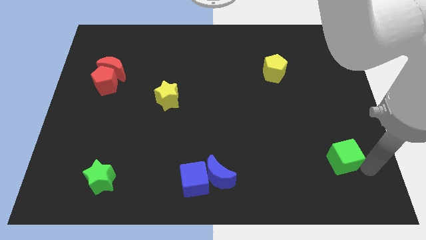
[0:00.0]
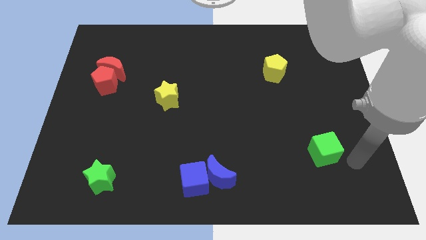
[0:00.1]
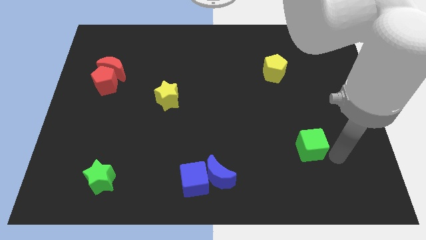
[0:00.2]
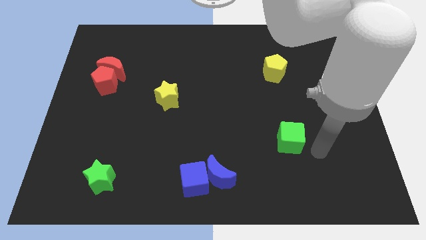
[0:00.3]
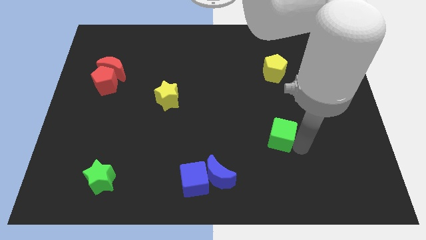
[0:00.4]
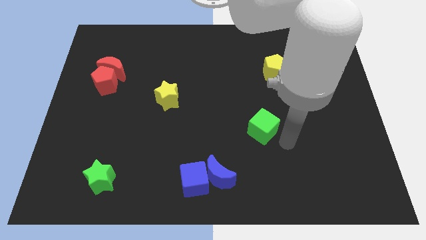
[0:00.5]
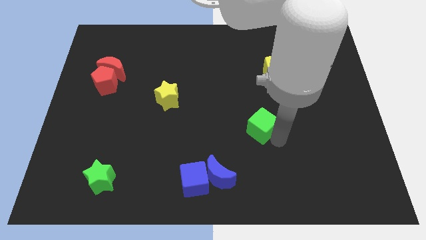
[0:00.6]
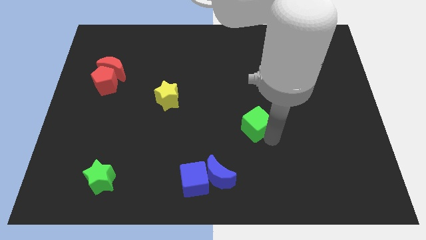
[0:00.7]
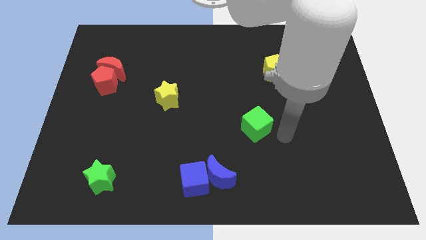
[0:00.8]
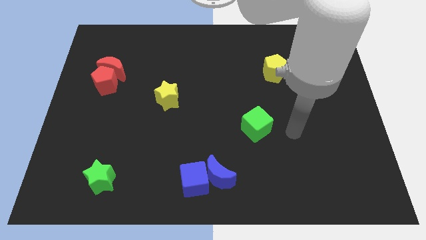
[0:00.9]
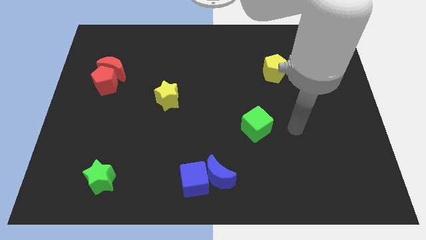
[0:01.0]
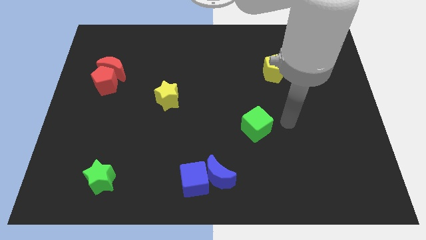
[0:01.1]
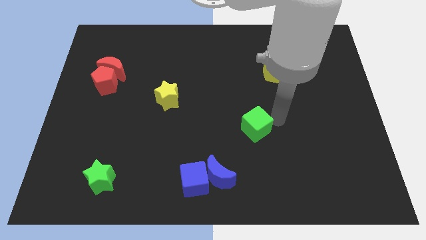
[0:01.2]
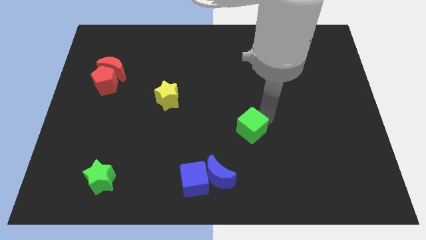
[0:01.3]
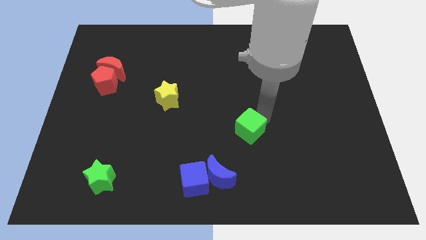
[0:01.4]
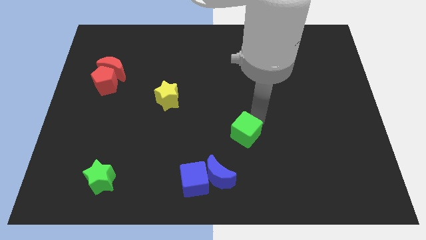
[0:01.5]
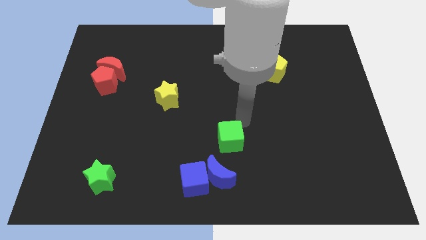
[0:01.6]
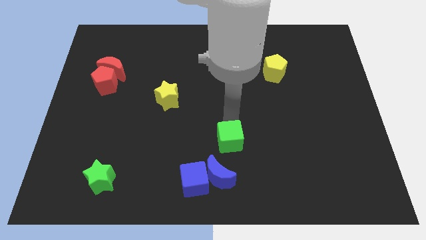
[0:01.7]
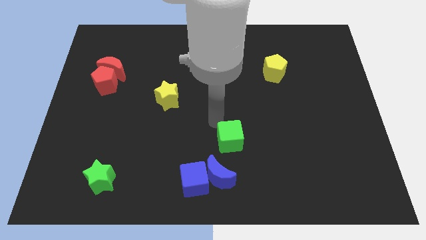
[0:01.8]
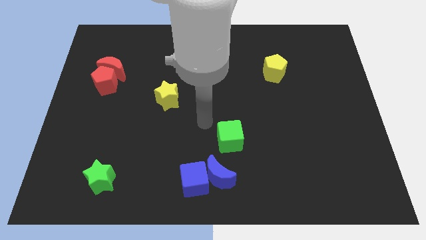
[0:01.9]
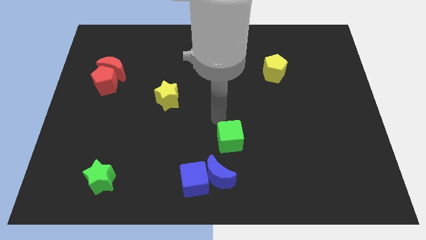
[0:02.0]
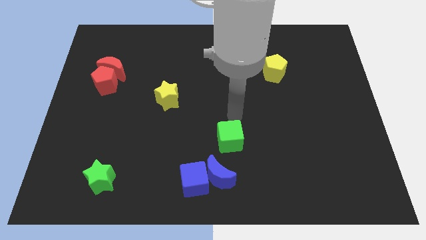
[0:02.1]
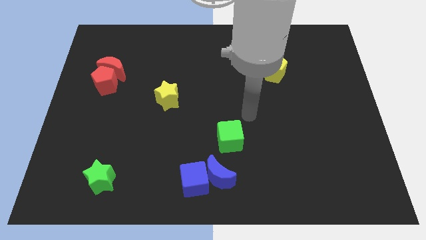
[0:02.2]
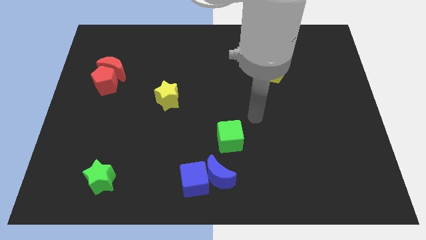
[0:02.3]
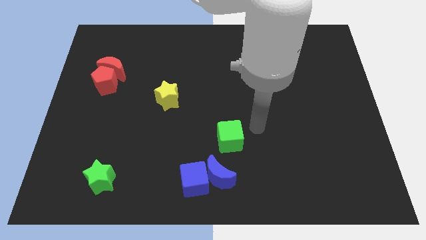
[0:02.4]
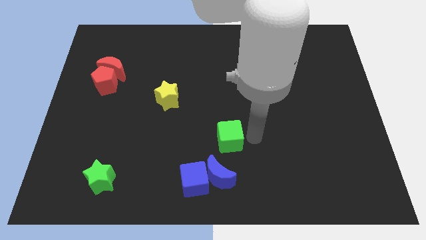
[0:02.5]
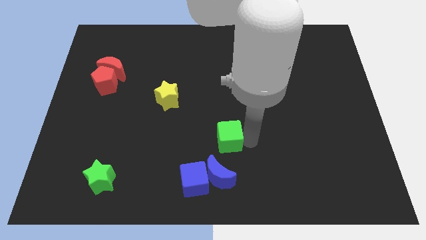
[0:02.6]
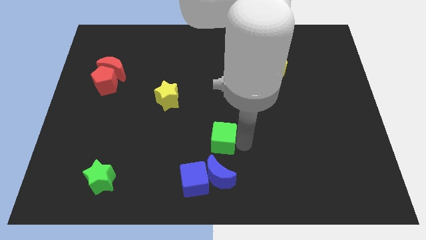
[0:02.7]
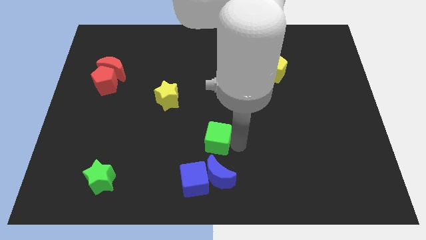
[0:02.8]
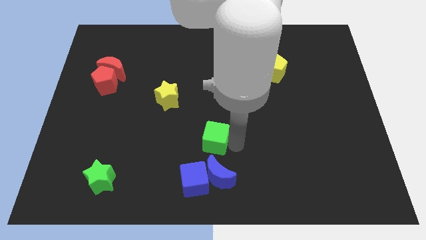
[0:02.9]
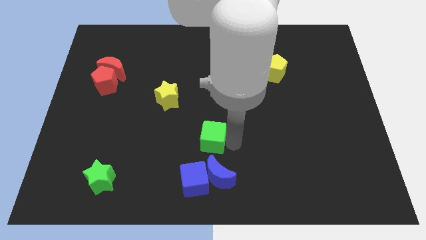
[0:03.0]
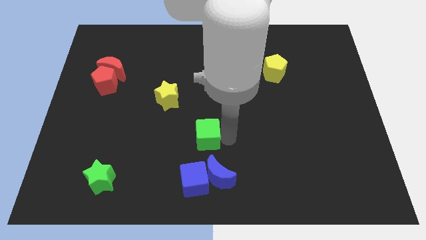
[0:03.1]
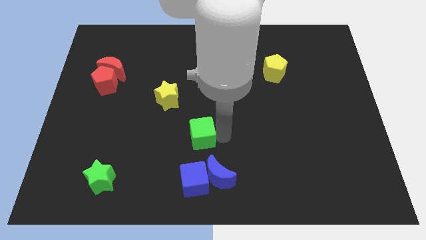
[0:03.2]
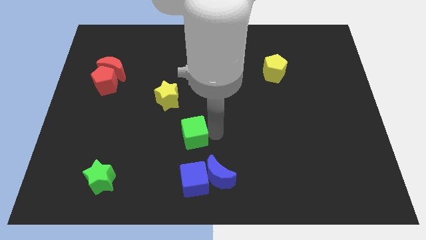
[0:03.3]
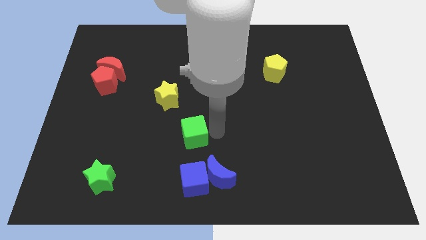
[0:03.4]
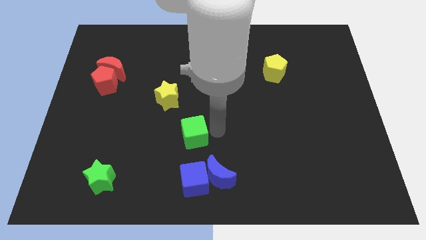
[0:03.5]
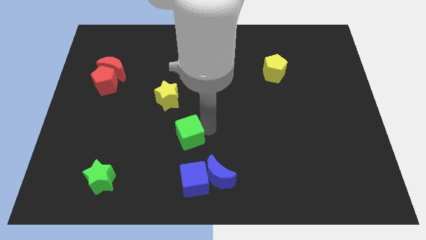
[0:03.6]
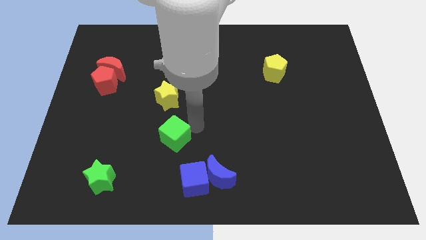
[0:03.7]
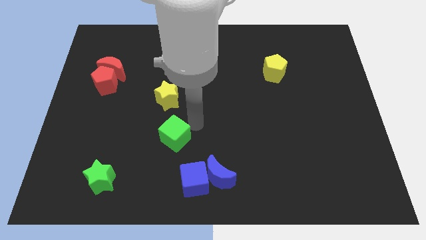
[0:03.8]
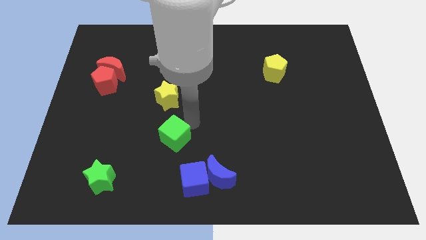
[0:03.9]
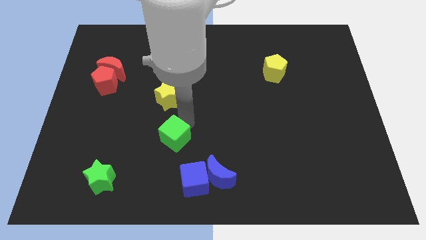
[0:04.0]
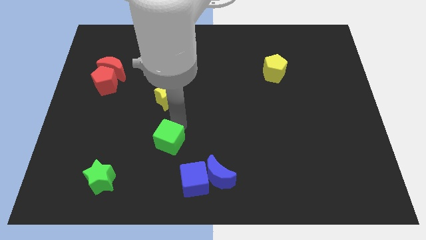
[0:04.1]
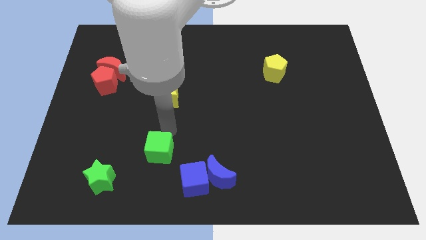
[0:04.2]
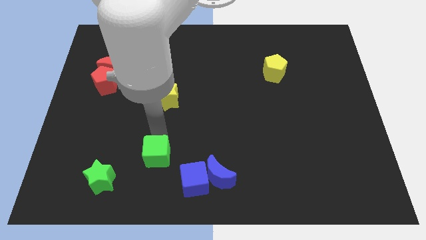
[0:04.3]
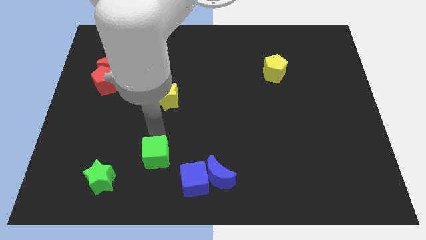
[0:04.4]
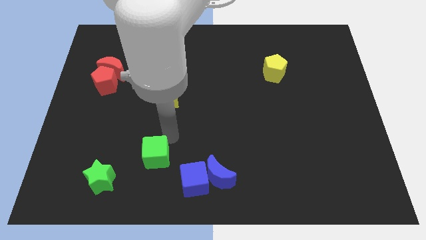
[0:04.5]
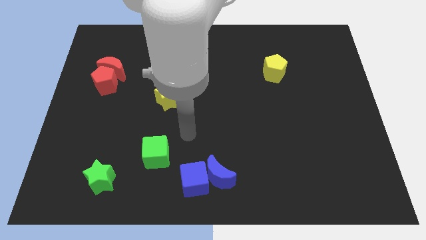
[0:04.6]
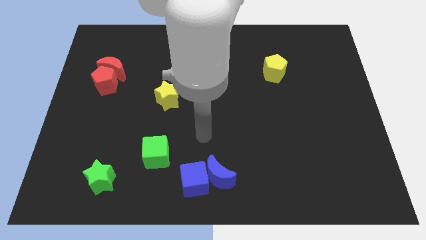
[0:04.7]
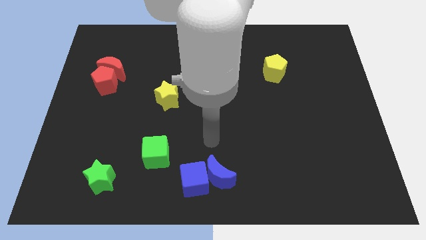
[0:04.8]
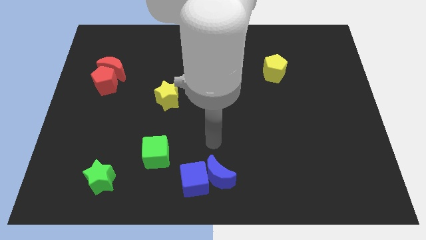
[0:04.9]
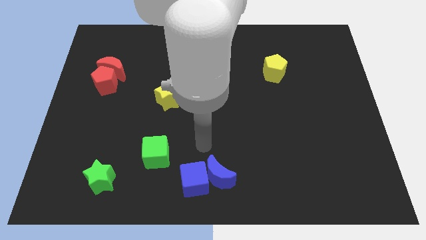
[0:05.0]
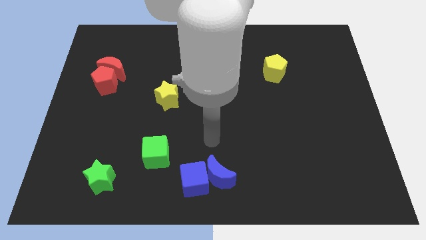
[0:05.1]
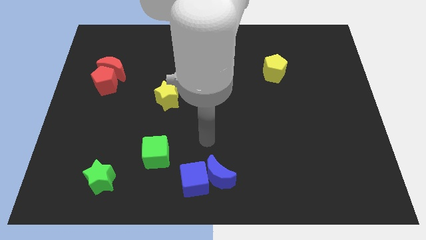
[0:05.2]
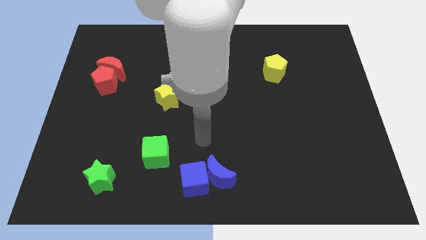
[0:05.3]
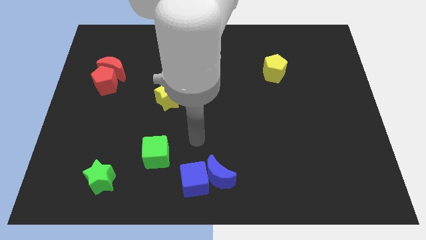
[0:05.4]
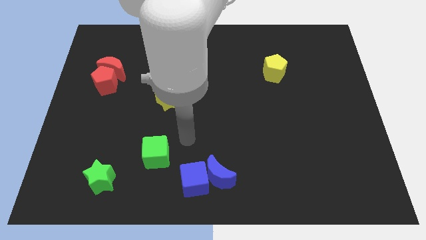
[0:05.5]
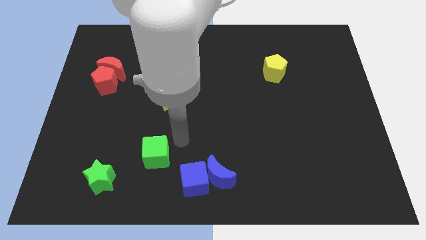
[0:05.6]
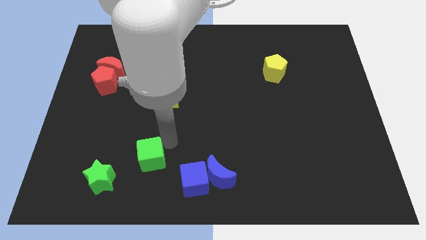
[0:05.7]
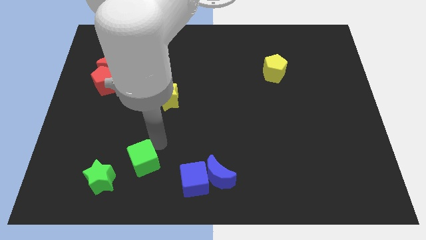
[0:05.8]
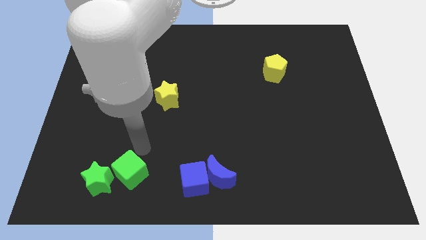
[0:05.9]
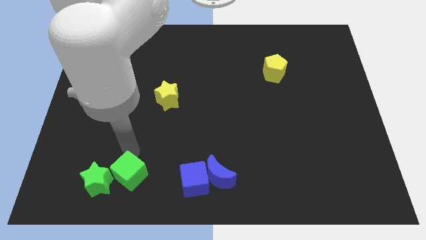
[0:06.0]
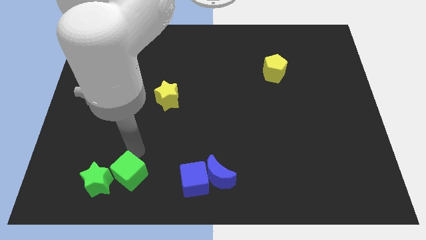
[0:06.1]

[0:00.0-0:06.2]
place the green cube right to the green star

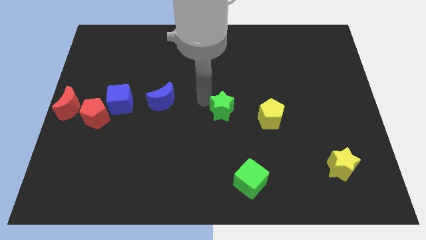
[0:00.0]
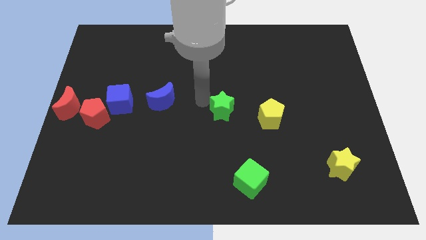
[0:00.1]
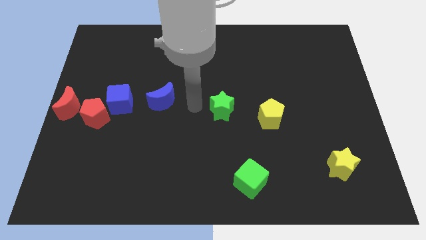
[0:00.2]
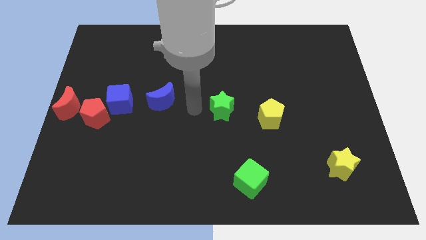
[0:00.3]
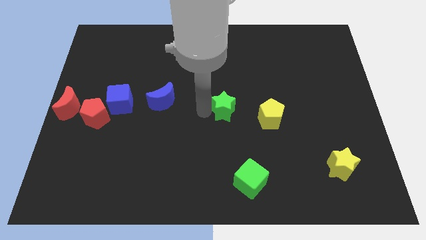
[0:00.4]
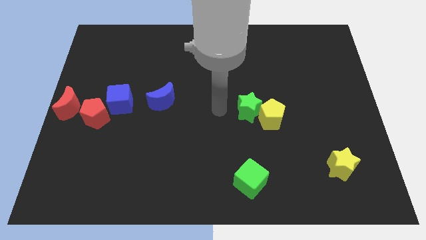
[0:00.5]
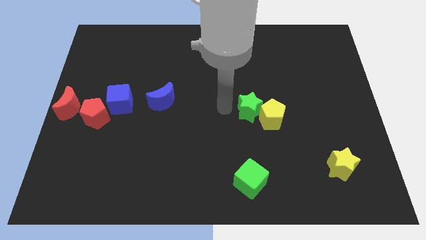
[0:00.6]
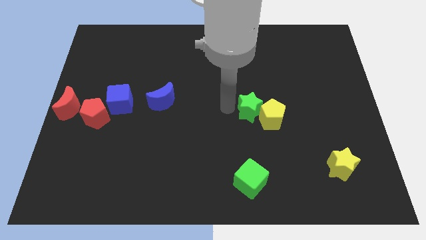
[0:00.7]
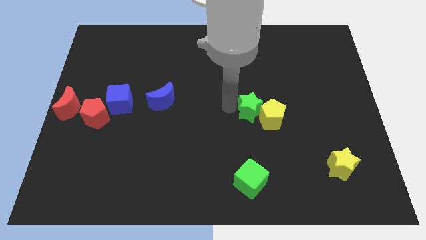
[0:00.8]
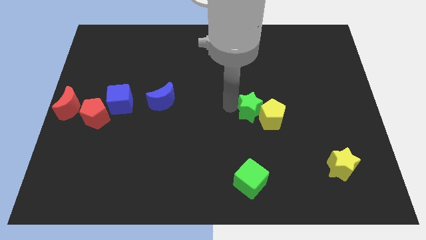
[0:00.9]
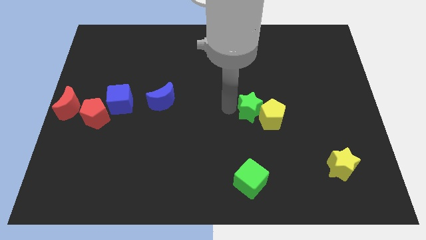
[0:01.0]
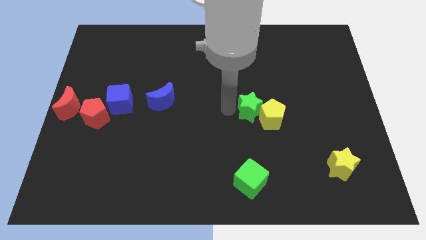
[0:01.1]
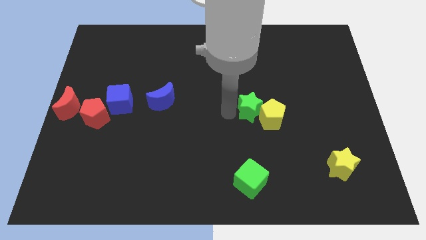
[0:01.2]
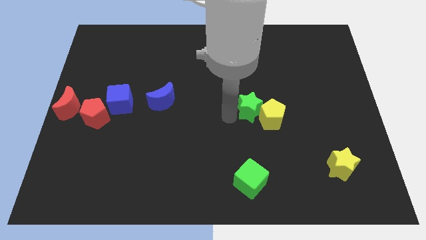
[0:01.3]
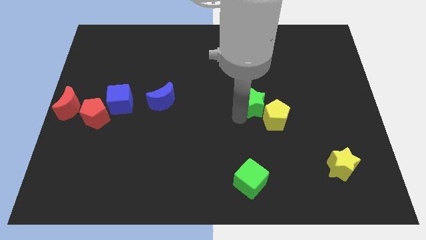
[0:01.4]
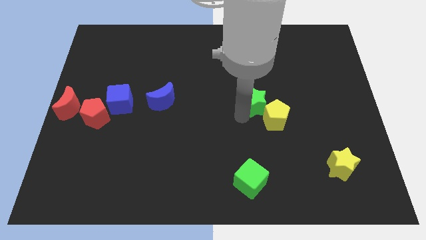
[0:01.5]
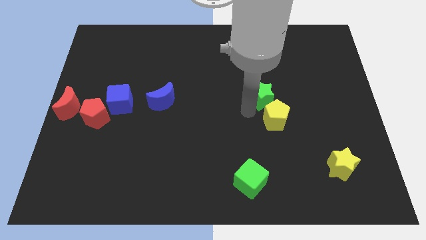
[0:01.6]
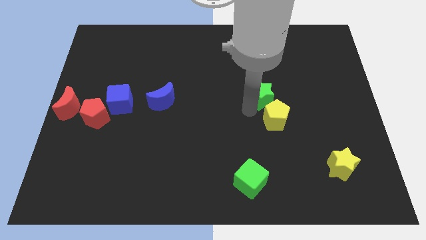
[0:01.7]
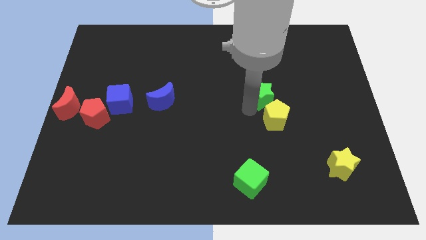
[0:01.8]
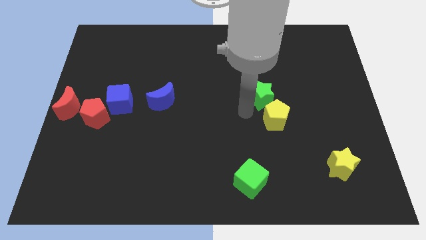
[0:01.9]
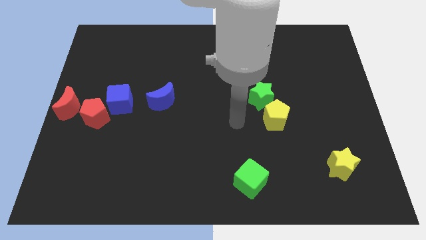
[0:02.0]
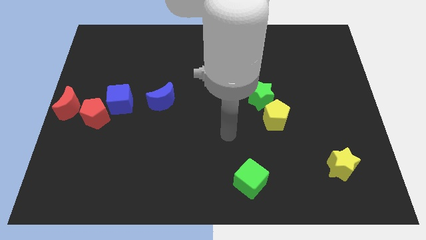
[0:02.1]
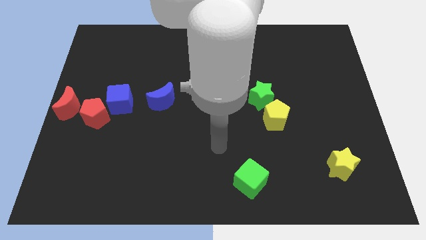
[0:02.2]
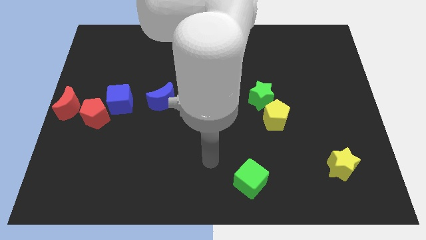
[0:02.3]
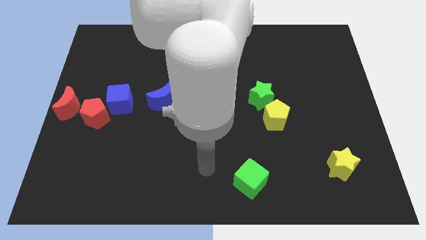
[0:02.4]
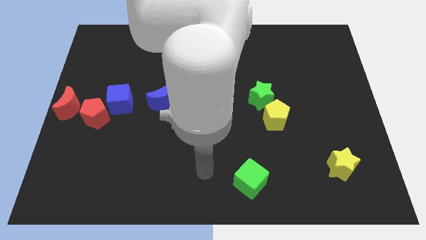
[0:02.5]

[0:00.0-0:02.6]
push the green star into the yellow pentagon

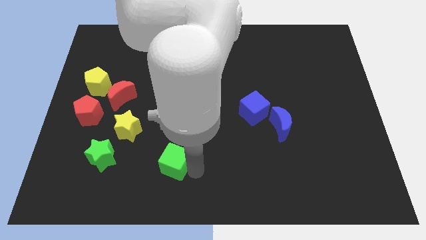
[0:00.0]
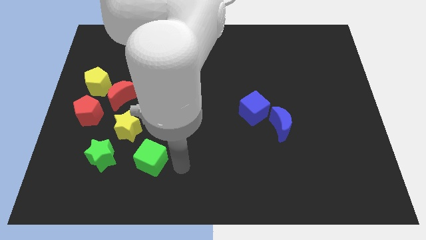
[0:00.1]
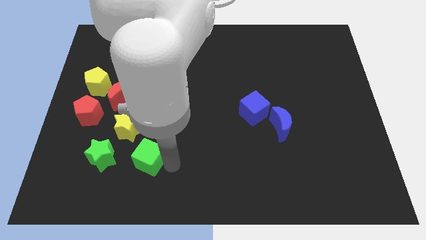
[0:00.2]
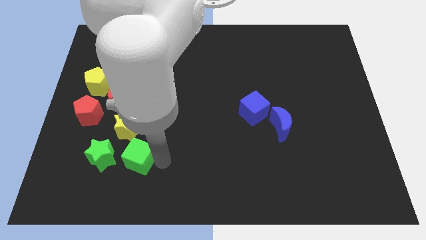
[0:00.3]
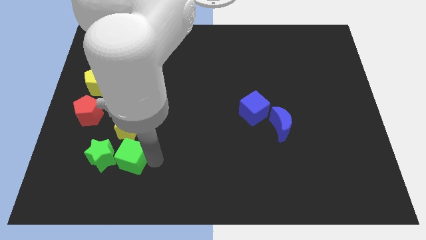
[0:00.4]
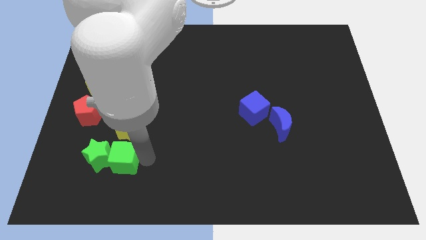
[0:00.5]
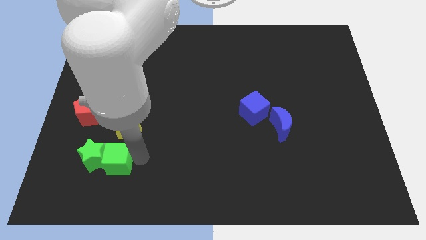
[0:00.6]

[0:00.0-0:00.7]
push the green cube to the right of the green star
